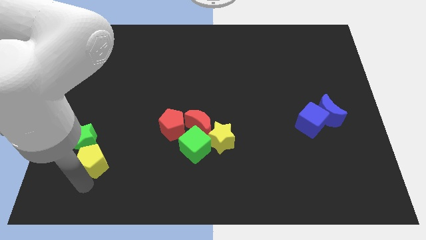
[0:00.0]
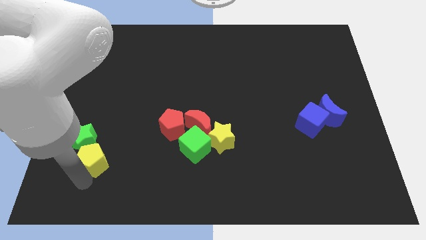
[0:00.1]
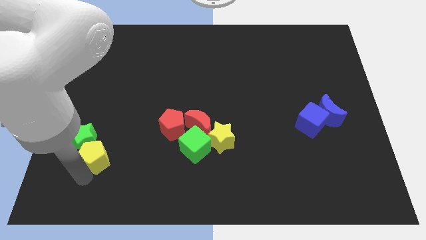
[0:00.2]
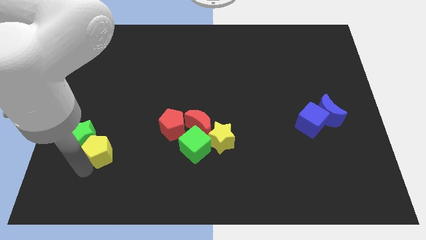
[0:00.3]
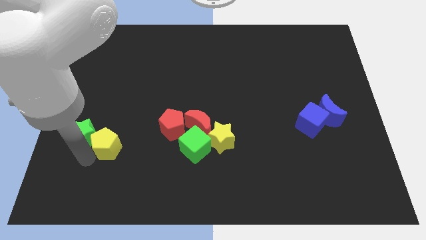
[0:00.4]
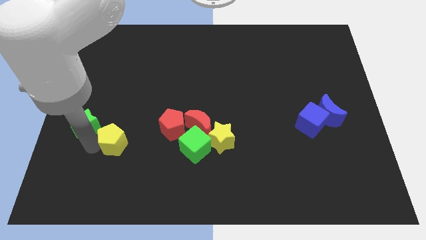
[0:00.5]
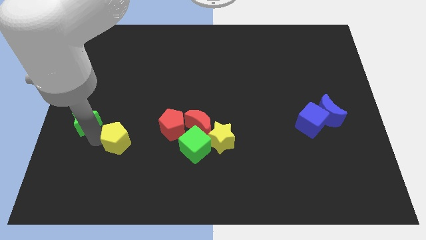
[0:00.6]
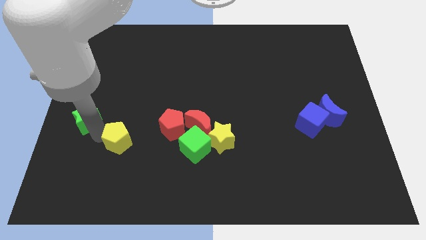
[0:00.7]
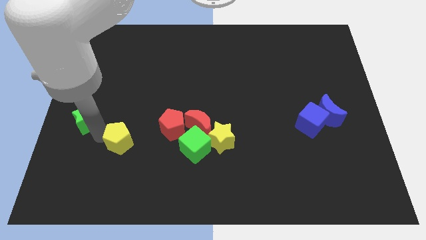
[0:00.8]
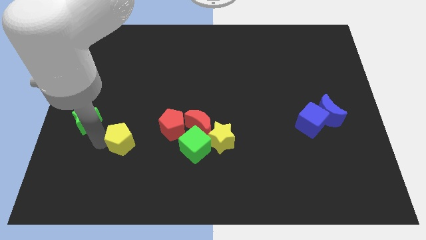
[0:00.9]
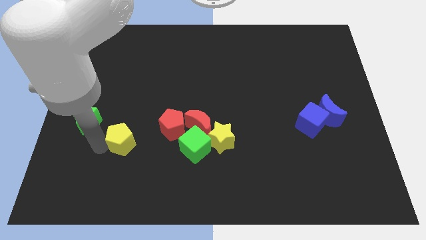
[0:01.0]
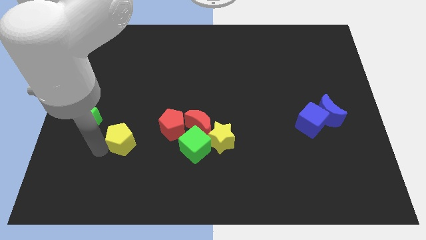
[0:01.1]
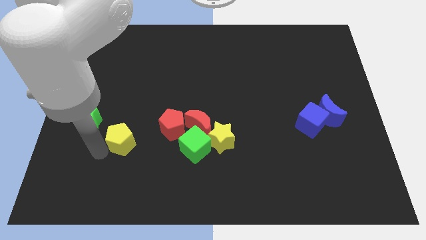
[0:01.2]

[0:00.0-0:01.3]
separate yellow pentagon from green star

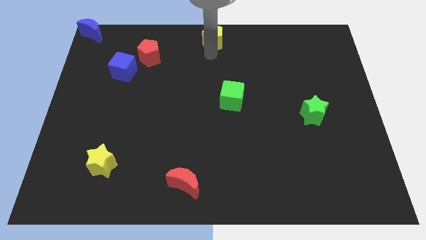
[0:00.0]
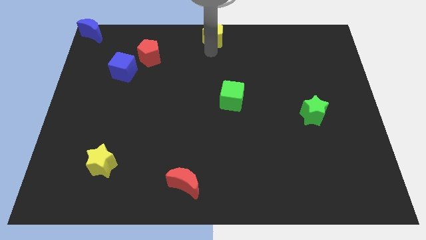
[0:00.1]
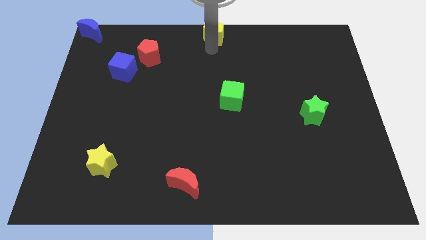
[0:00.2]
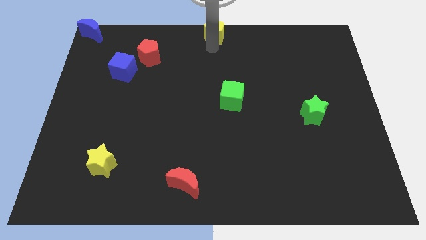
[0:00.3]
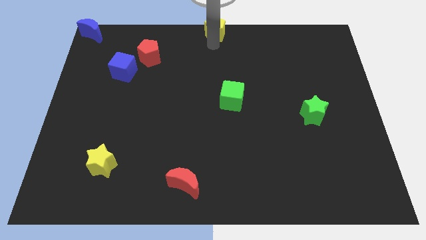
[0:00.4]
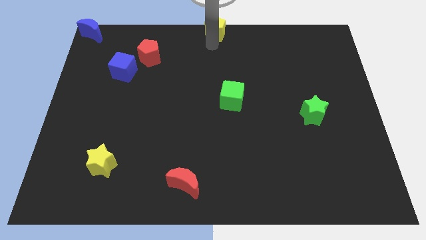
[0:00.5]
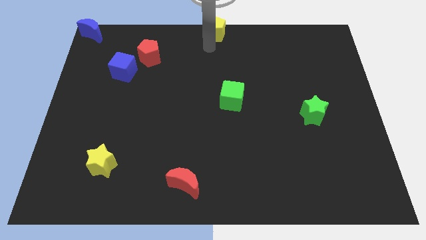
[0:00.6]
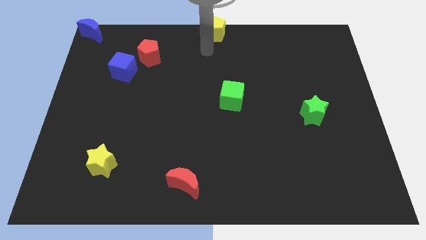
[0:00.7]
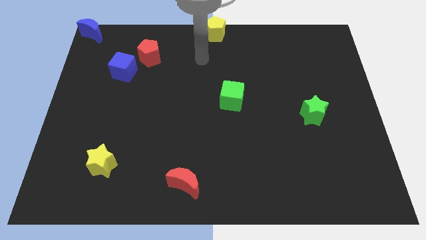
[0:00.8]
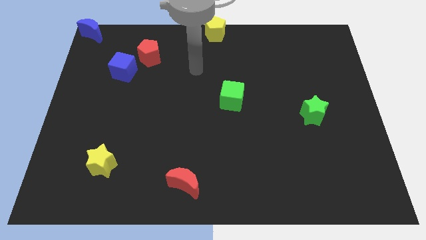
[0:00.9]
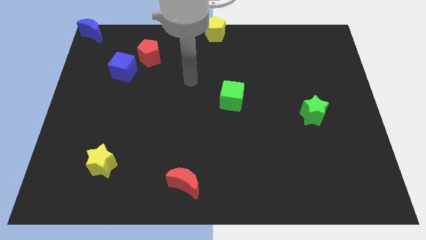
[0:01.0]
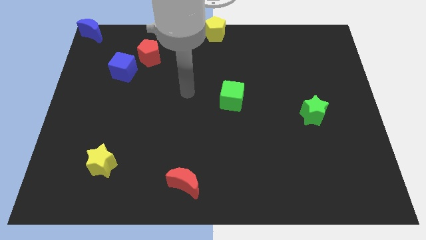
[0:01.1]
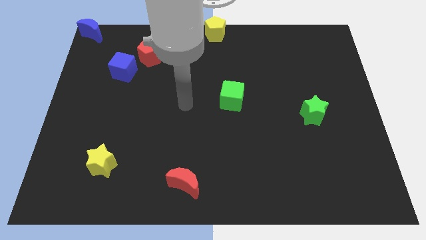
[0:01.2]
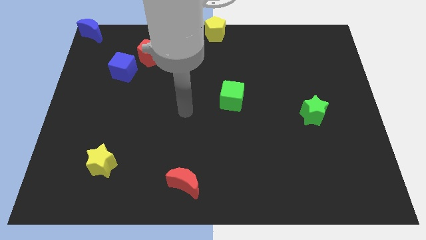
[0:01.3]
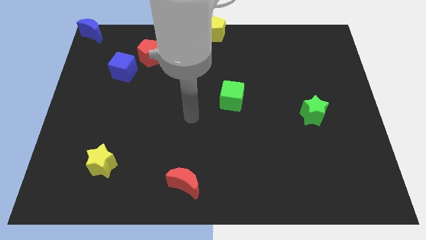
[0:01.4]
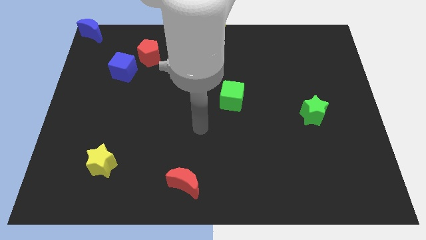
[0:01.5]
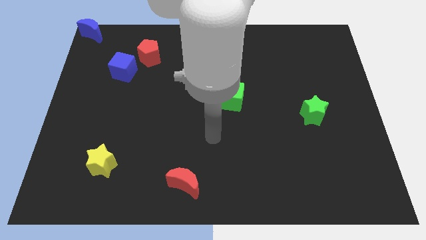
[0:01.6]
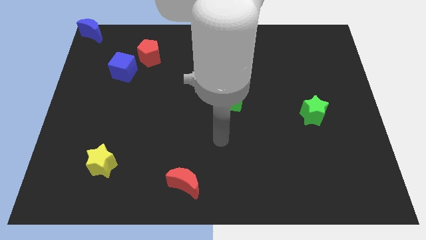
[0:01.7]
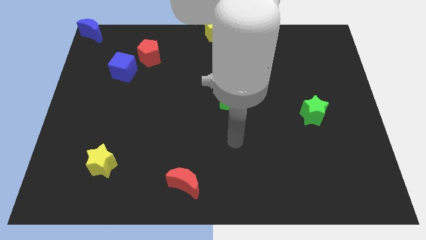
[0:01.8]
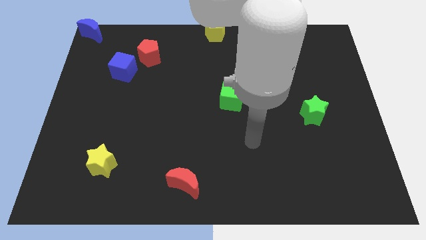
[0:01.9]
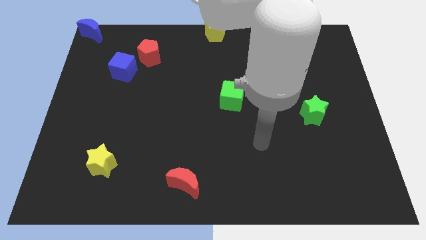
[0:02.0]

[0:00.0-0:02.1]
move the arm away from yellow pentagon

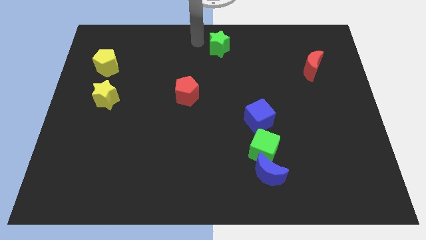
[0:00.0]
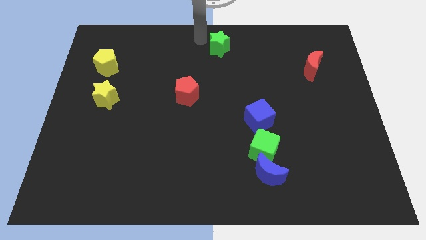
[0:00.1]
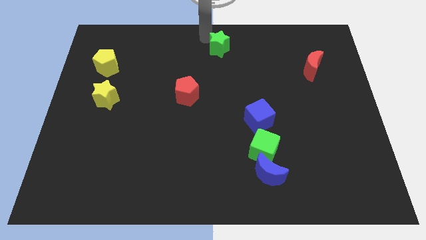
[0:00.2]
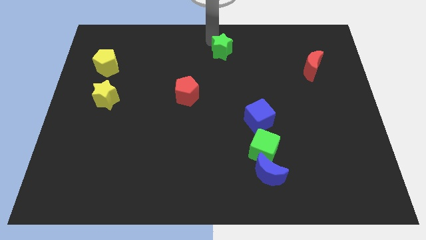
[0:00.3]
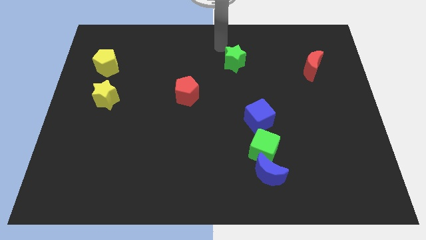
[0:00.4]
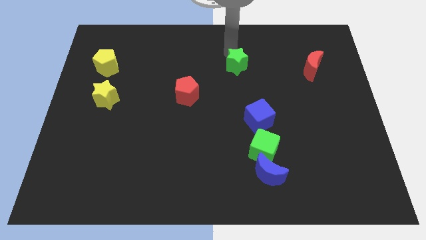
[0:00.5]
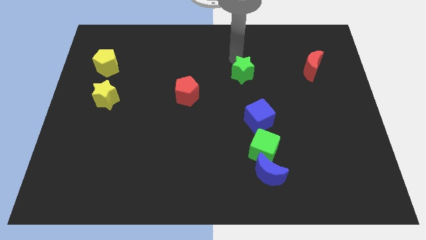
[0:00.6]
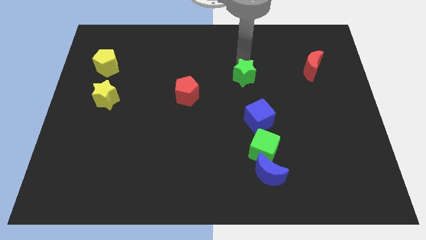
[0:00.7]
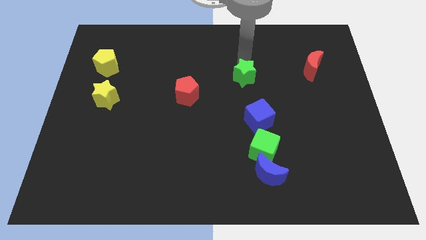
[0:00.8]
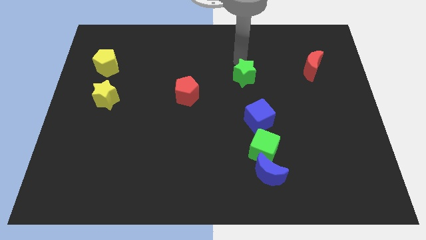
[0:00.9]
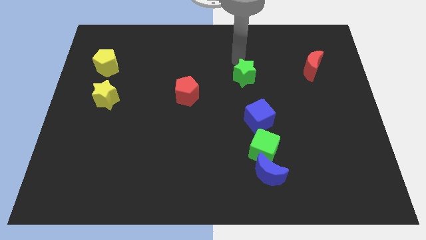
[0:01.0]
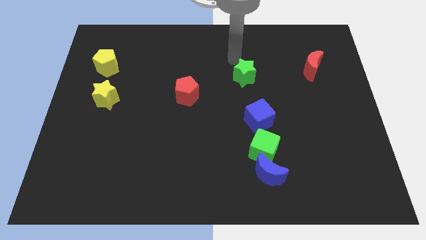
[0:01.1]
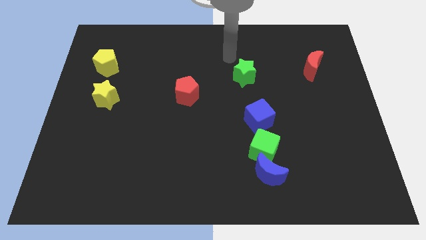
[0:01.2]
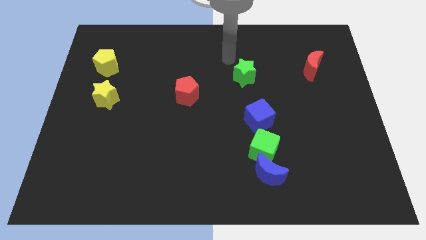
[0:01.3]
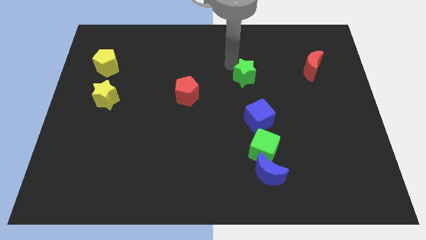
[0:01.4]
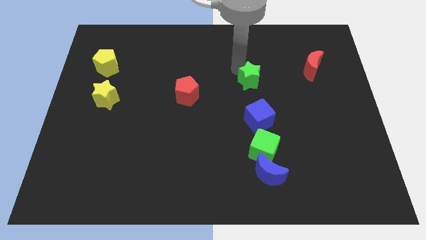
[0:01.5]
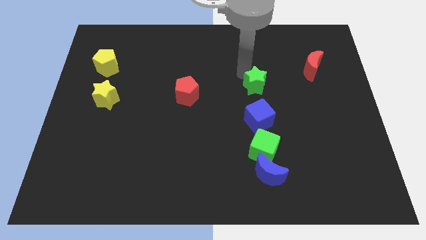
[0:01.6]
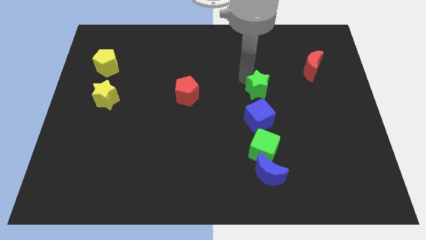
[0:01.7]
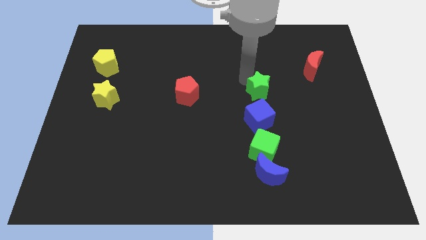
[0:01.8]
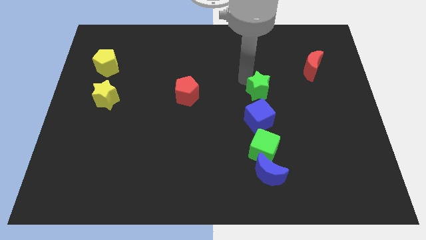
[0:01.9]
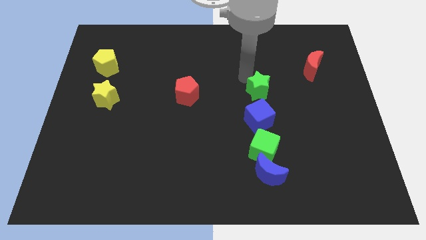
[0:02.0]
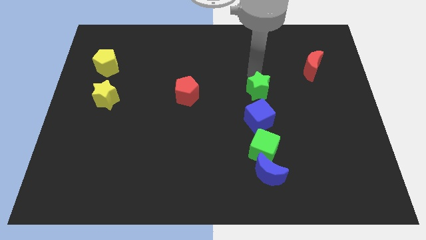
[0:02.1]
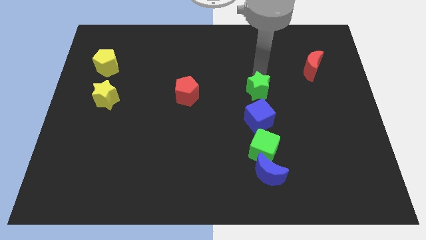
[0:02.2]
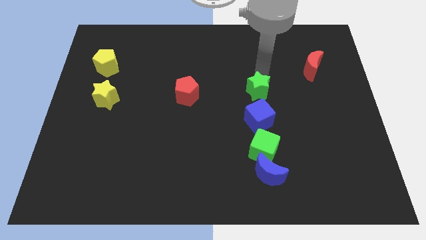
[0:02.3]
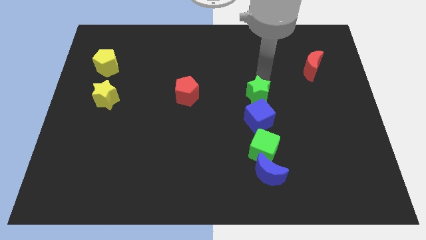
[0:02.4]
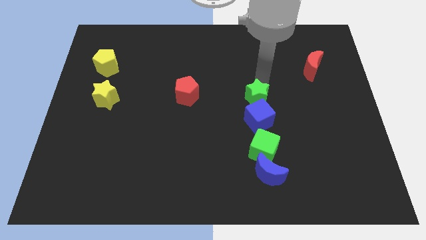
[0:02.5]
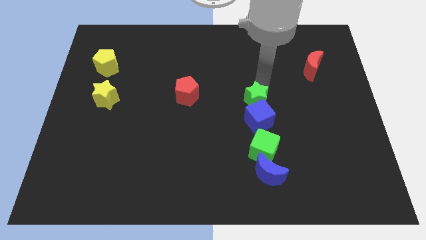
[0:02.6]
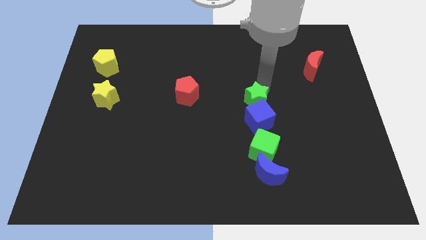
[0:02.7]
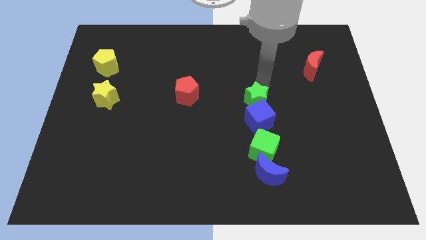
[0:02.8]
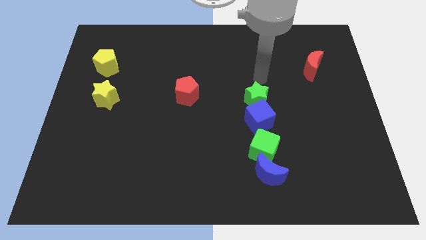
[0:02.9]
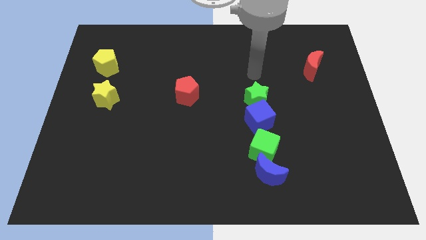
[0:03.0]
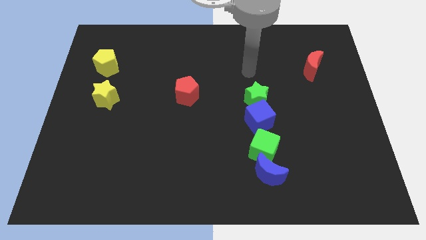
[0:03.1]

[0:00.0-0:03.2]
push the green star into the blue cube

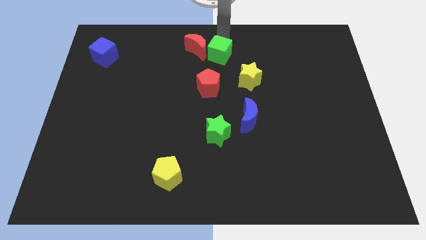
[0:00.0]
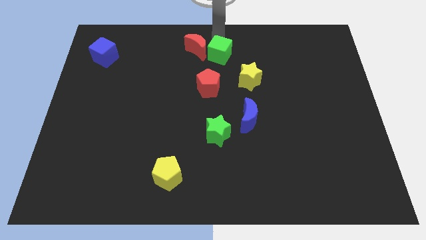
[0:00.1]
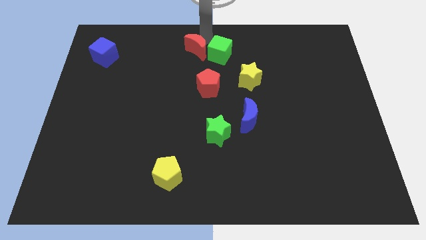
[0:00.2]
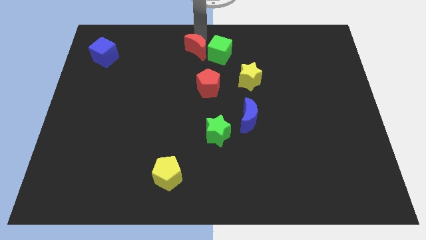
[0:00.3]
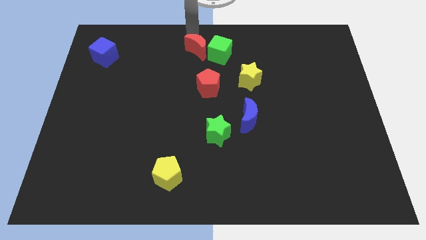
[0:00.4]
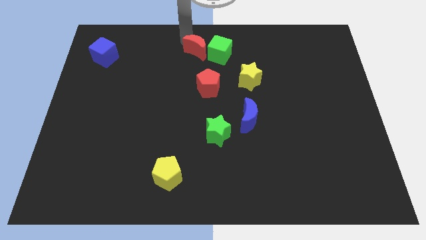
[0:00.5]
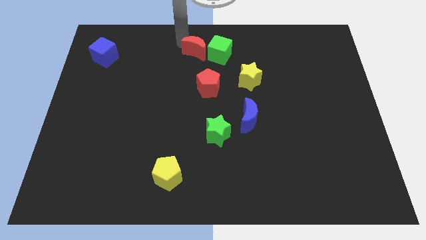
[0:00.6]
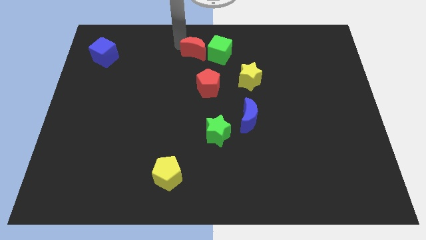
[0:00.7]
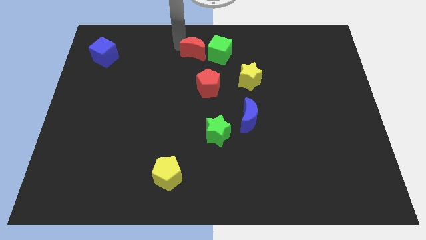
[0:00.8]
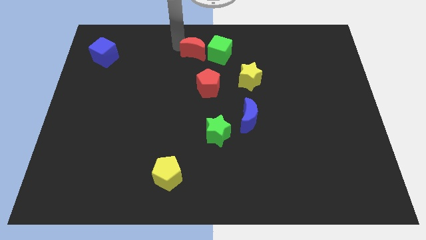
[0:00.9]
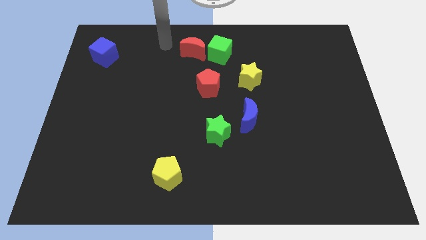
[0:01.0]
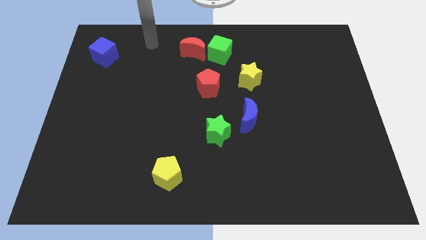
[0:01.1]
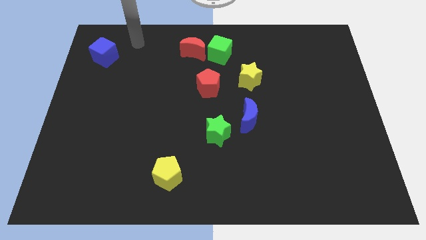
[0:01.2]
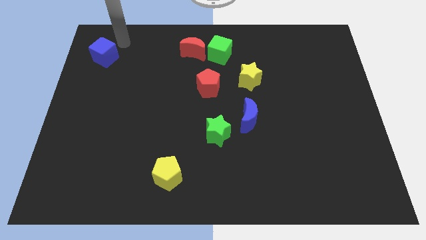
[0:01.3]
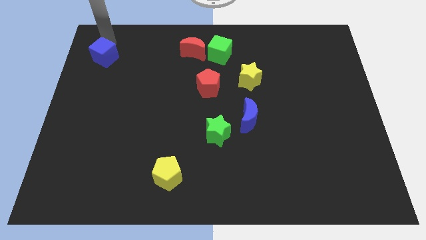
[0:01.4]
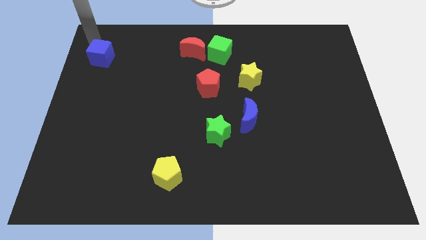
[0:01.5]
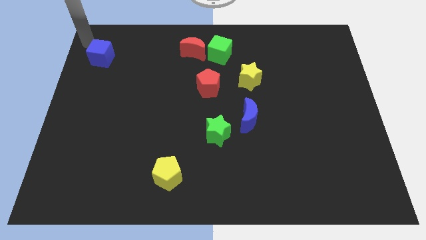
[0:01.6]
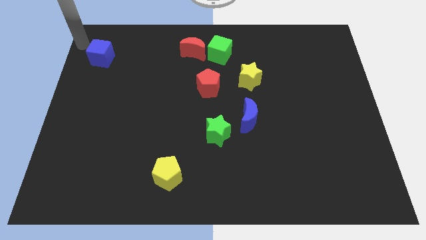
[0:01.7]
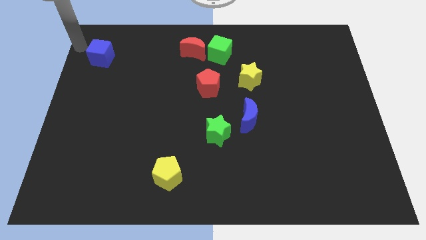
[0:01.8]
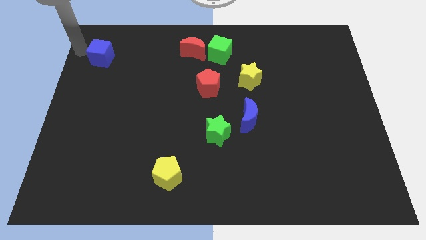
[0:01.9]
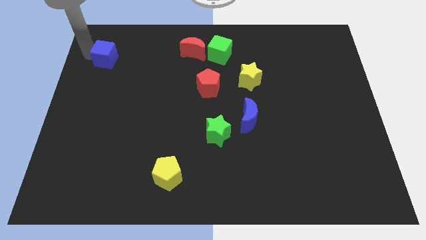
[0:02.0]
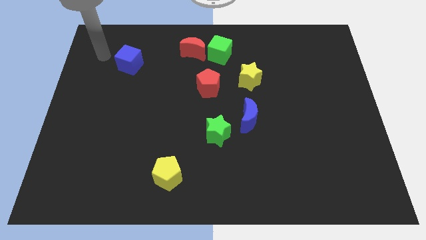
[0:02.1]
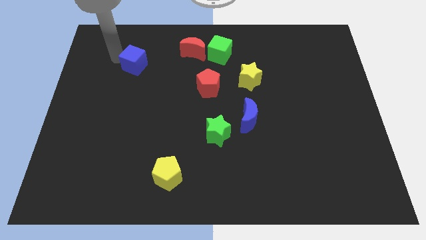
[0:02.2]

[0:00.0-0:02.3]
slightly push the red moon
